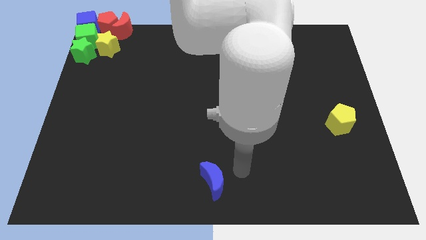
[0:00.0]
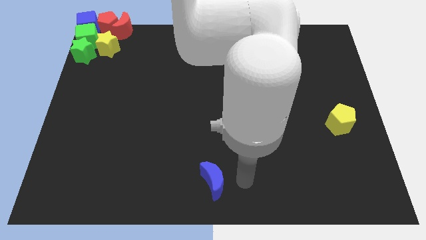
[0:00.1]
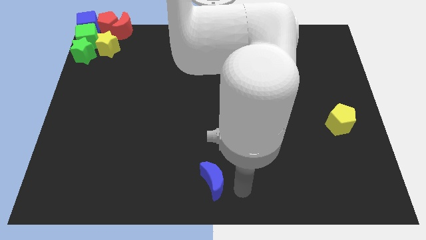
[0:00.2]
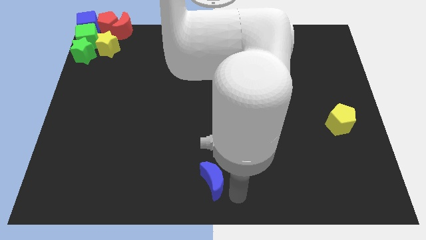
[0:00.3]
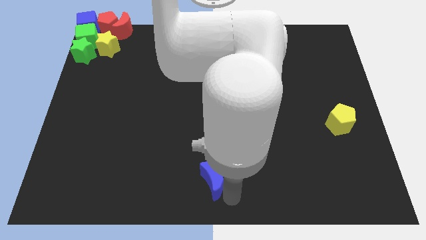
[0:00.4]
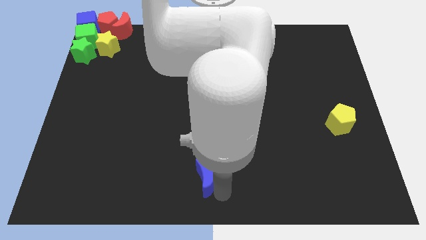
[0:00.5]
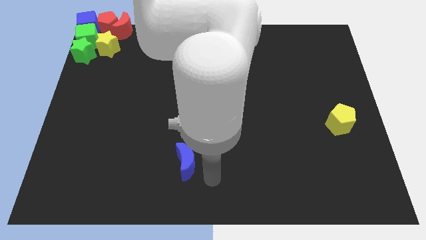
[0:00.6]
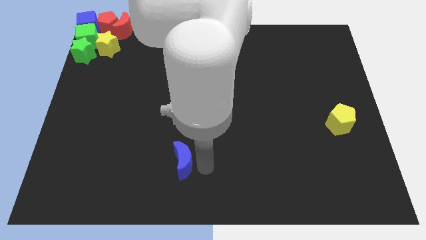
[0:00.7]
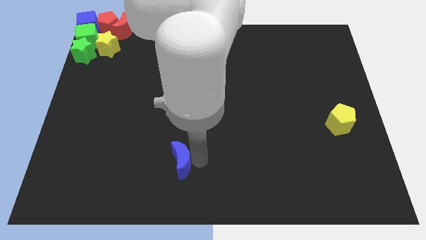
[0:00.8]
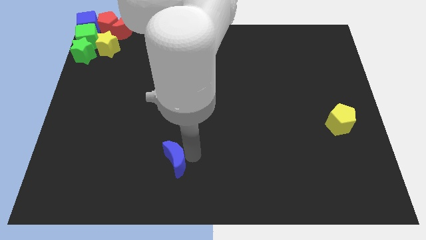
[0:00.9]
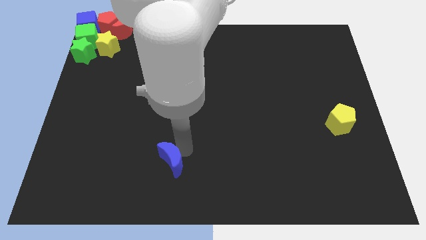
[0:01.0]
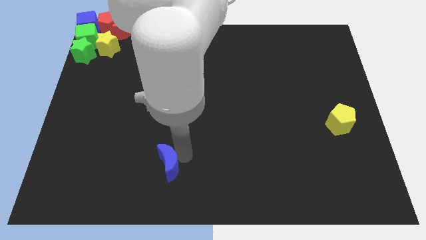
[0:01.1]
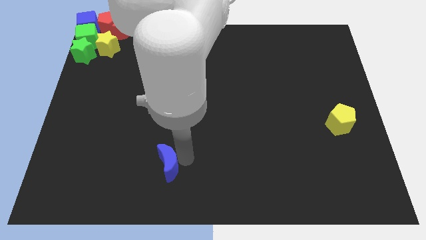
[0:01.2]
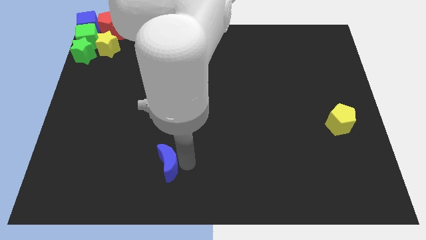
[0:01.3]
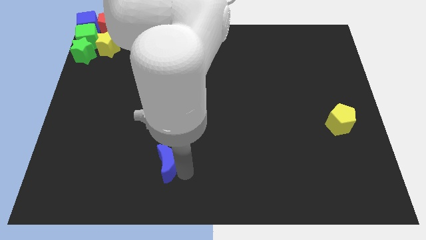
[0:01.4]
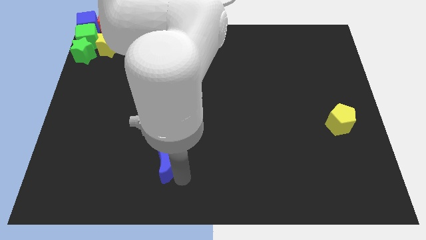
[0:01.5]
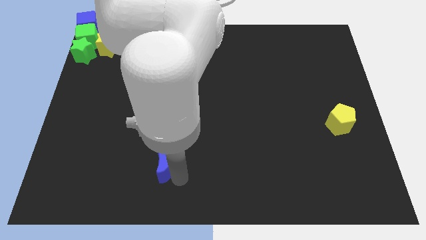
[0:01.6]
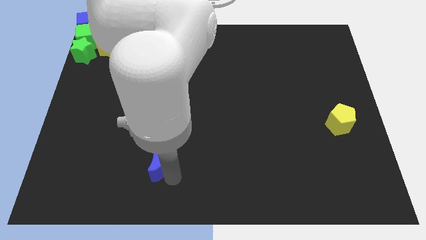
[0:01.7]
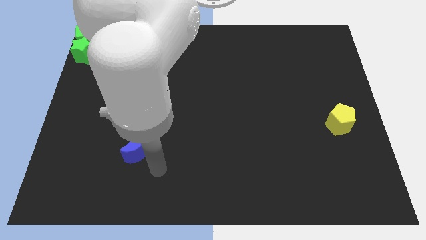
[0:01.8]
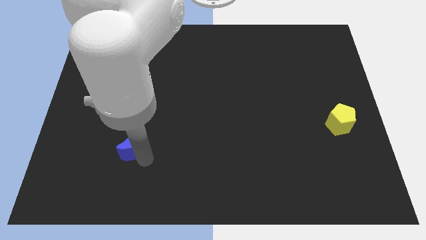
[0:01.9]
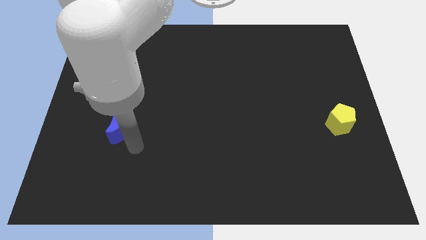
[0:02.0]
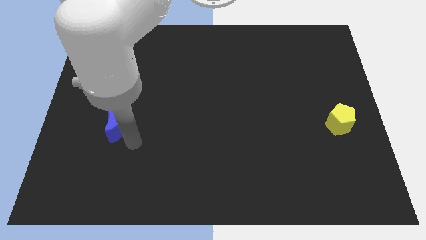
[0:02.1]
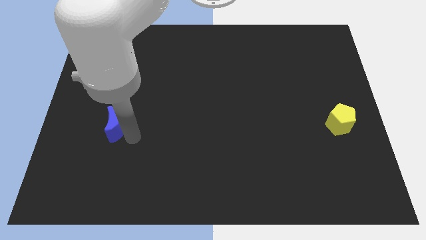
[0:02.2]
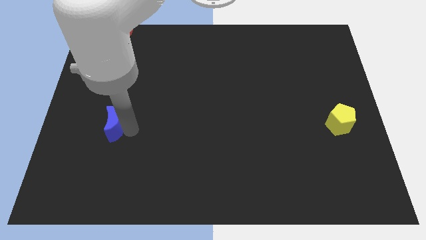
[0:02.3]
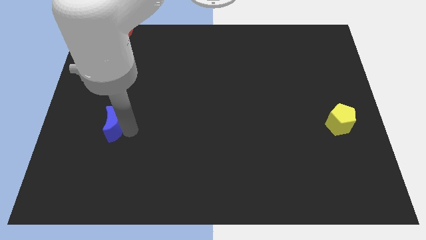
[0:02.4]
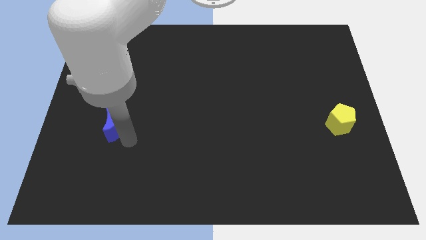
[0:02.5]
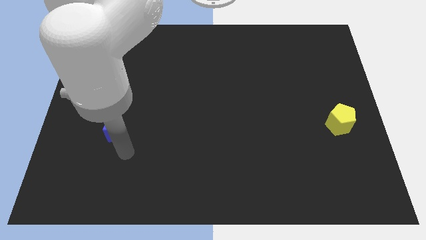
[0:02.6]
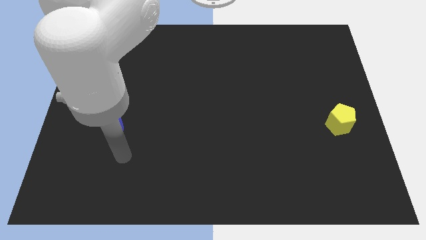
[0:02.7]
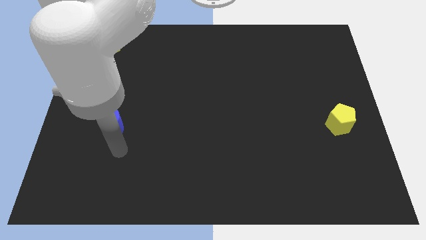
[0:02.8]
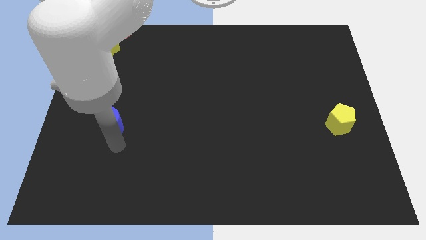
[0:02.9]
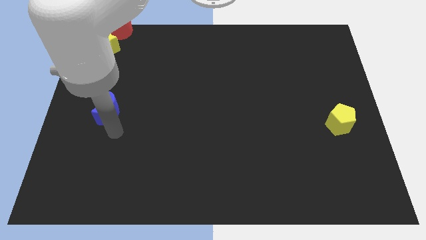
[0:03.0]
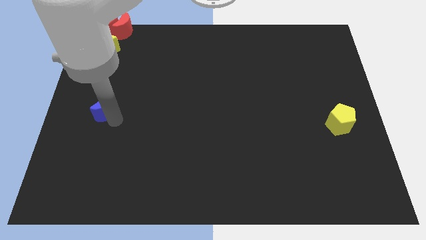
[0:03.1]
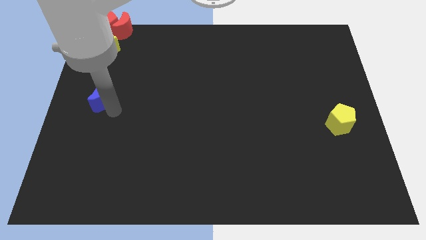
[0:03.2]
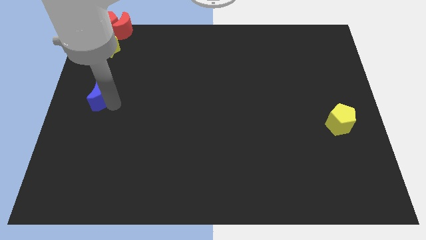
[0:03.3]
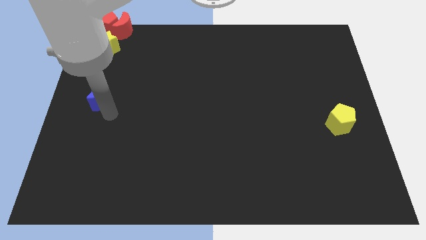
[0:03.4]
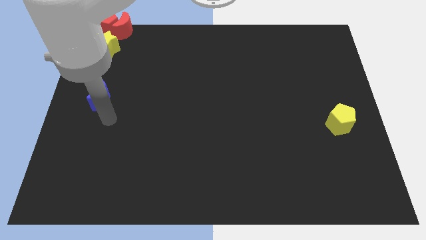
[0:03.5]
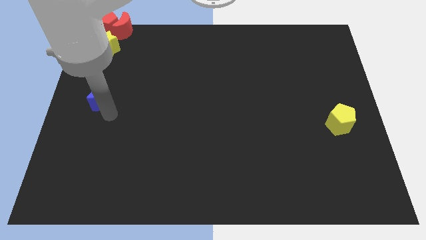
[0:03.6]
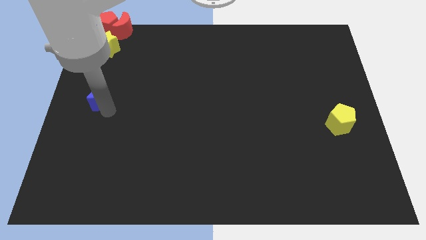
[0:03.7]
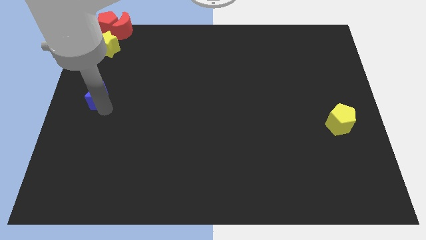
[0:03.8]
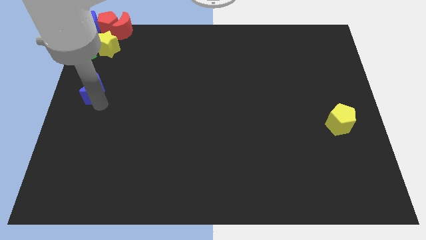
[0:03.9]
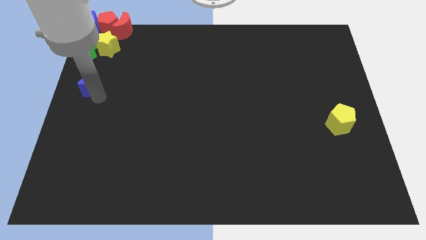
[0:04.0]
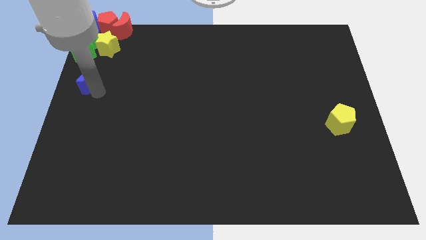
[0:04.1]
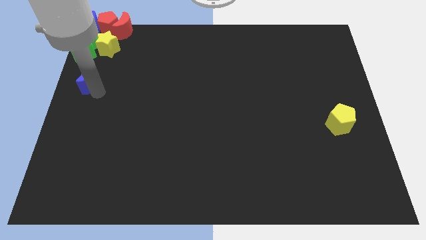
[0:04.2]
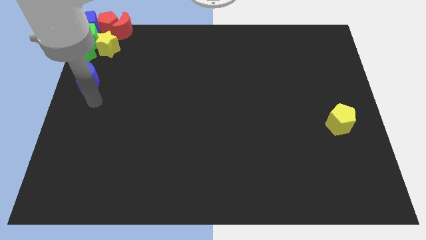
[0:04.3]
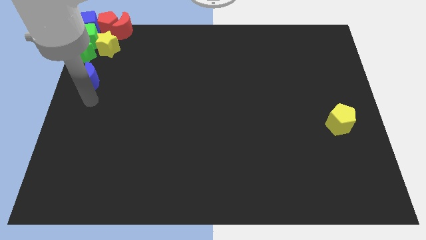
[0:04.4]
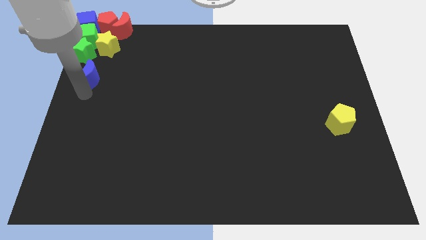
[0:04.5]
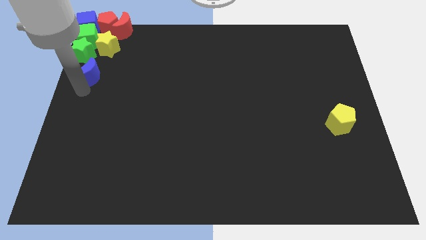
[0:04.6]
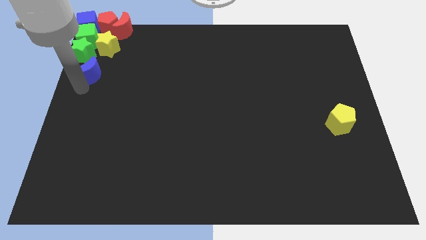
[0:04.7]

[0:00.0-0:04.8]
move blue crescent towards bottom of green star

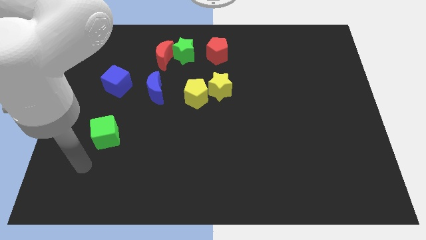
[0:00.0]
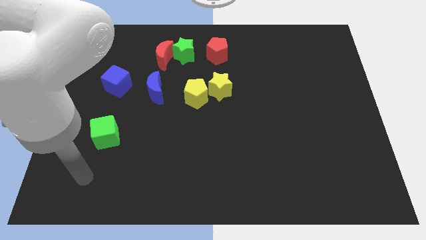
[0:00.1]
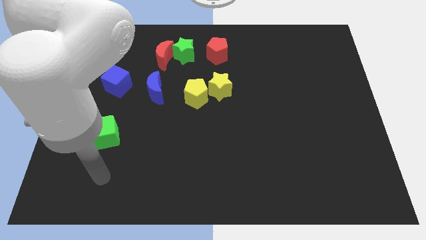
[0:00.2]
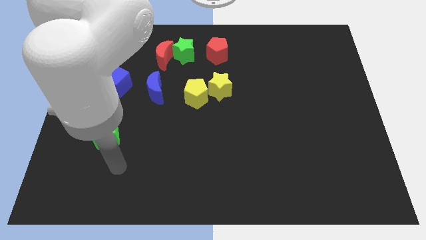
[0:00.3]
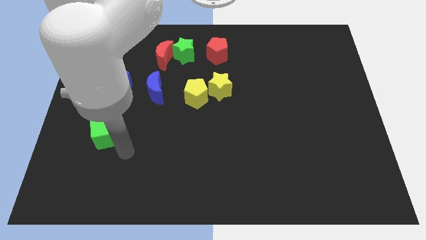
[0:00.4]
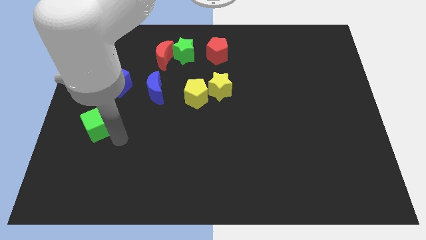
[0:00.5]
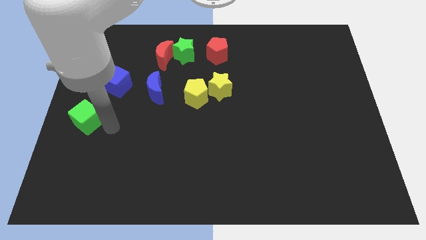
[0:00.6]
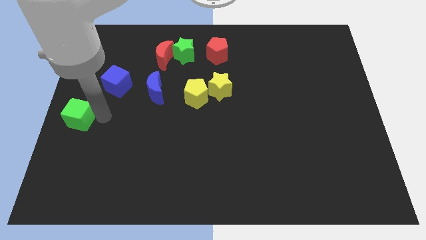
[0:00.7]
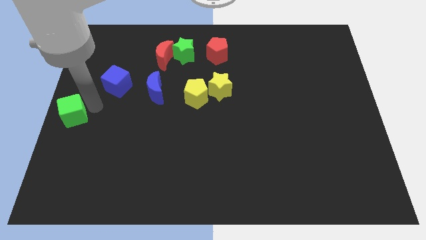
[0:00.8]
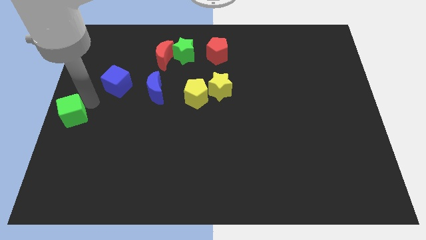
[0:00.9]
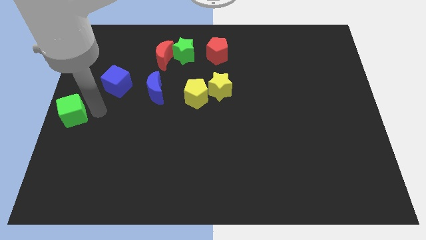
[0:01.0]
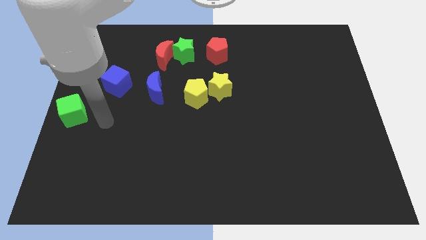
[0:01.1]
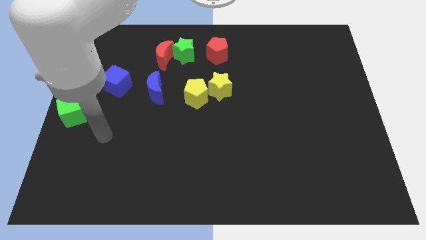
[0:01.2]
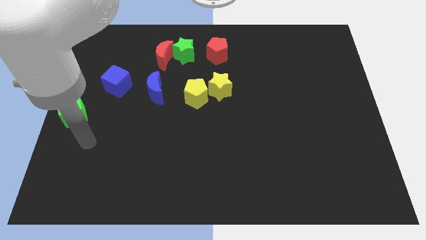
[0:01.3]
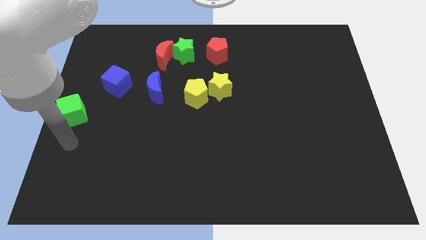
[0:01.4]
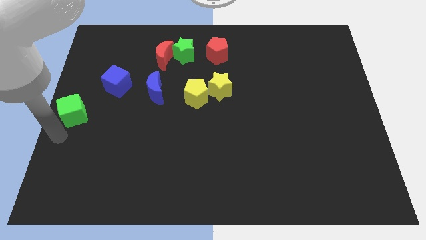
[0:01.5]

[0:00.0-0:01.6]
put the green cube at the center left side of the board

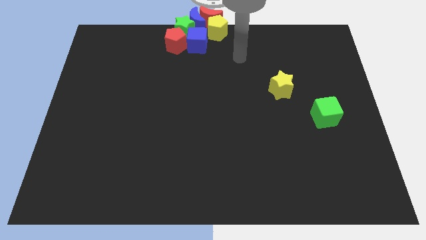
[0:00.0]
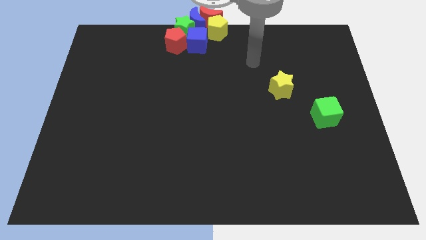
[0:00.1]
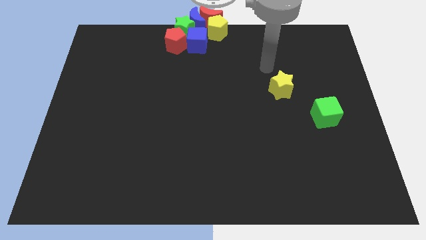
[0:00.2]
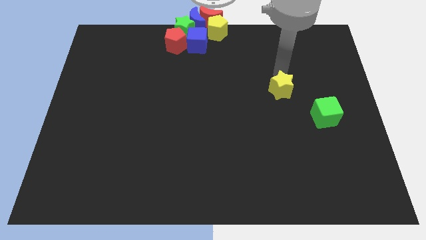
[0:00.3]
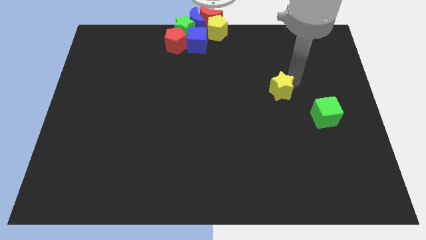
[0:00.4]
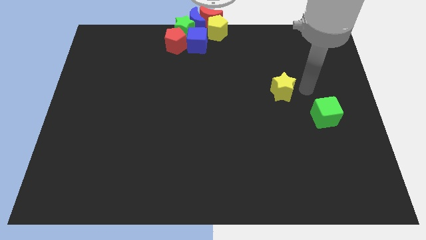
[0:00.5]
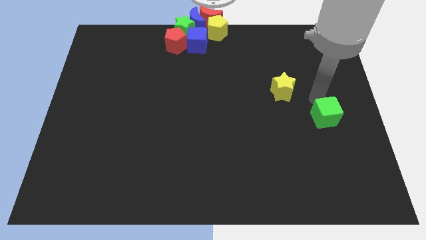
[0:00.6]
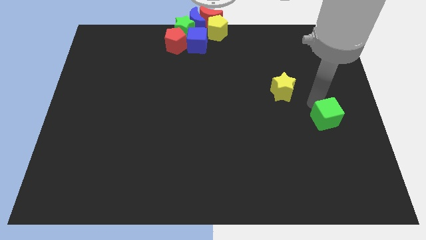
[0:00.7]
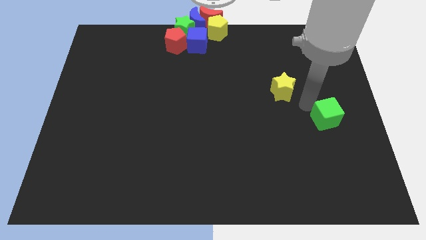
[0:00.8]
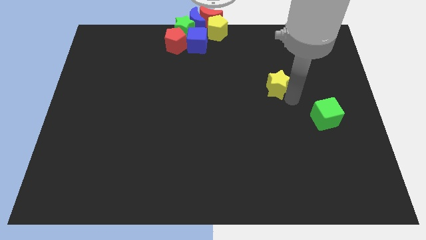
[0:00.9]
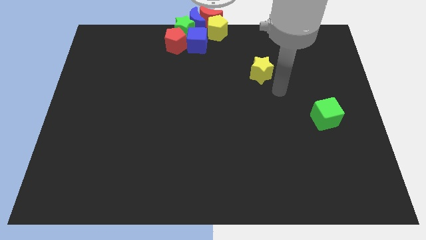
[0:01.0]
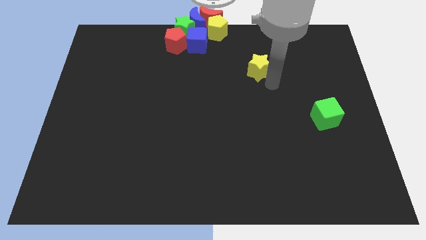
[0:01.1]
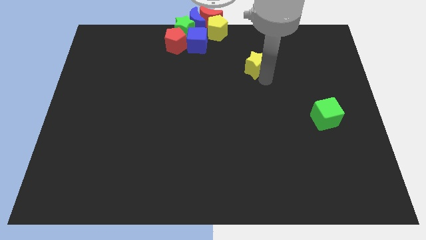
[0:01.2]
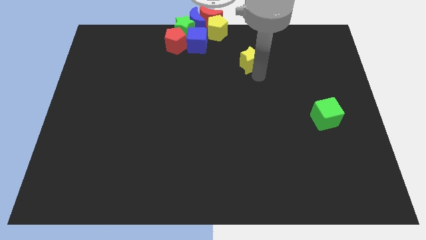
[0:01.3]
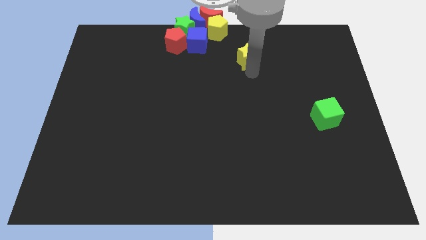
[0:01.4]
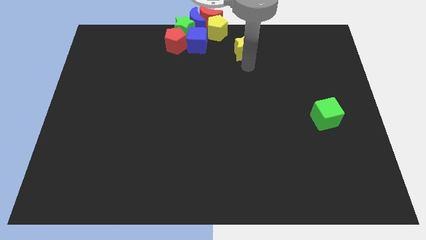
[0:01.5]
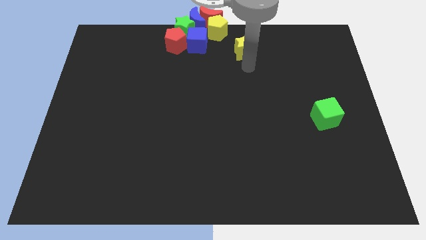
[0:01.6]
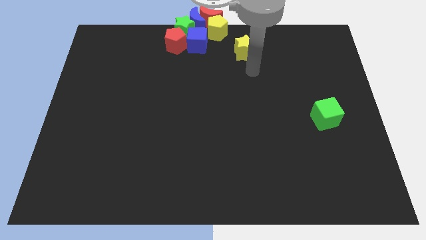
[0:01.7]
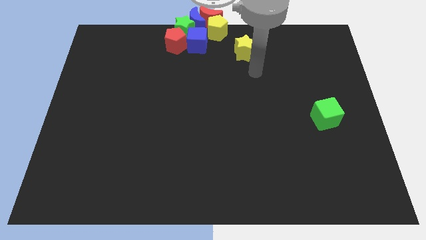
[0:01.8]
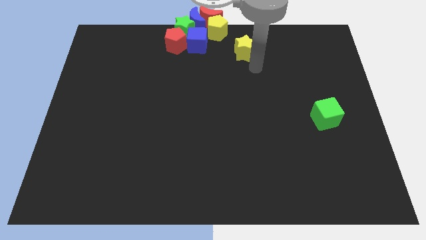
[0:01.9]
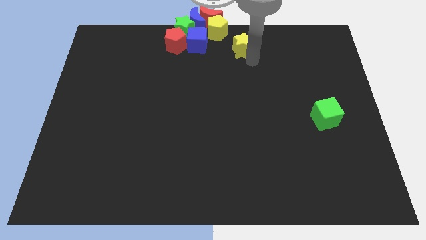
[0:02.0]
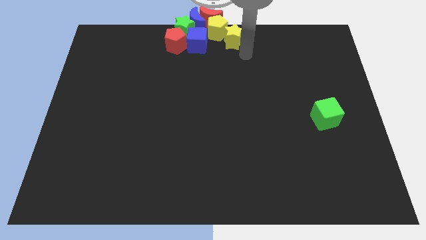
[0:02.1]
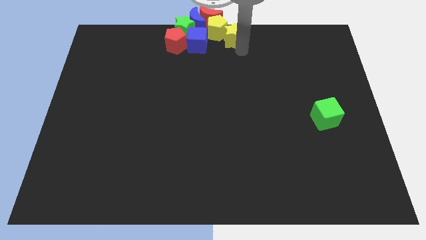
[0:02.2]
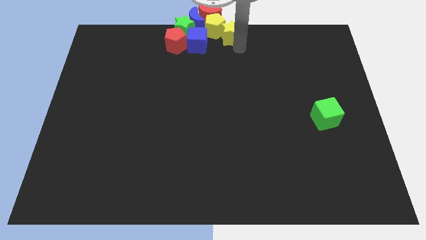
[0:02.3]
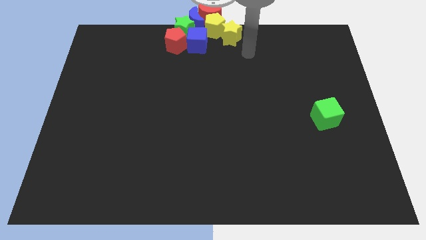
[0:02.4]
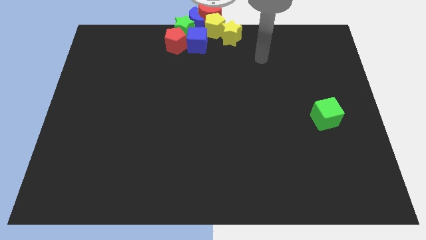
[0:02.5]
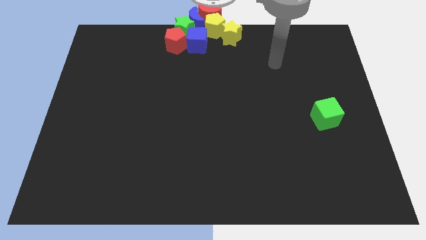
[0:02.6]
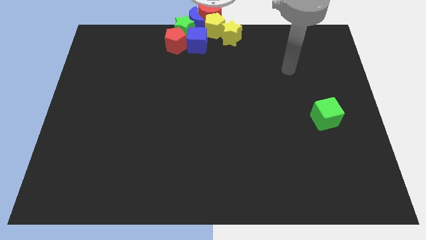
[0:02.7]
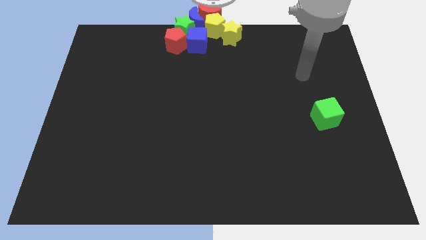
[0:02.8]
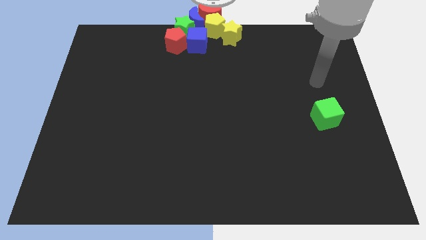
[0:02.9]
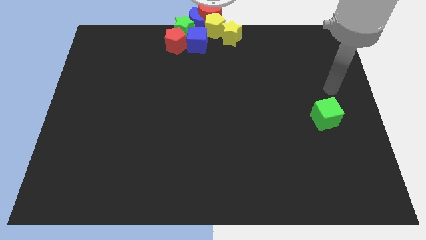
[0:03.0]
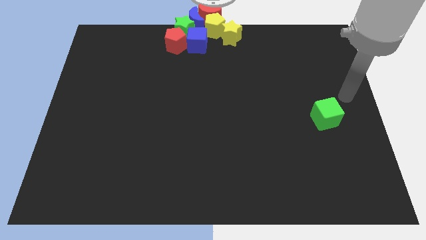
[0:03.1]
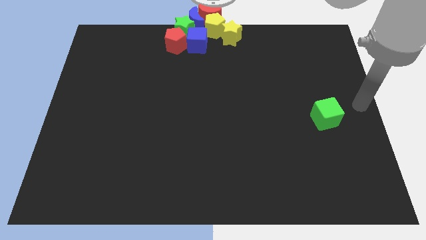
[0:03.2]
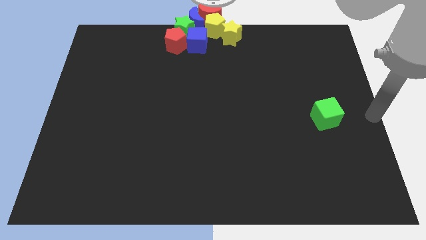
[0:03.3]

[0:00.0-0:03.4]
push yellow star below the yellow pentagon
